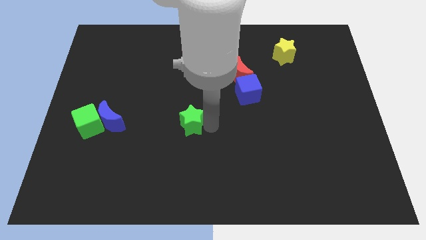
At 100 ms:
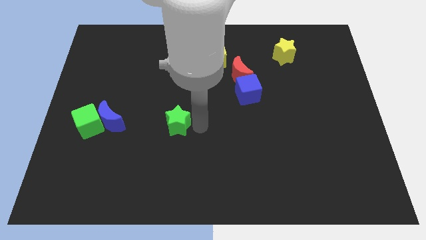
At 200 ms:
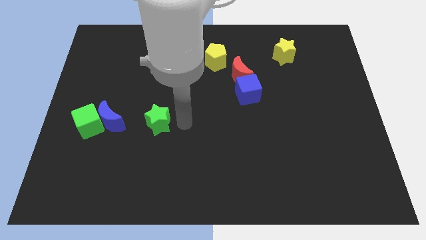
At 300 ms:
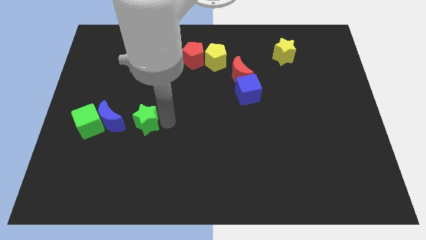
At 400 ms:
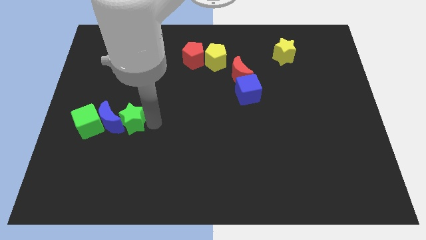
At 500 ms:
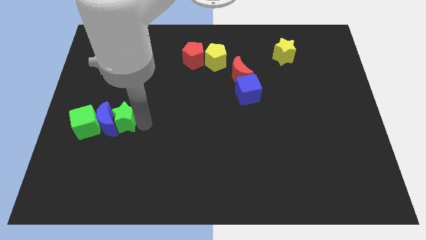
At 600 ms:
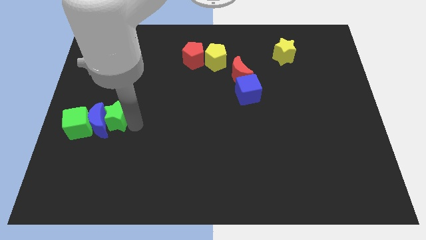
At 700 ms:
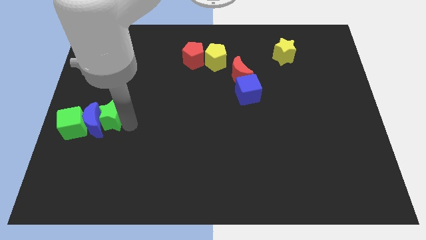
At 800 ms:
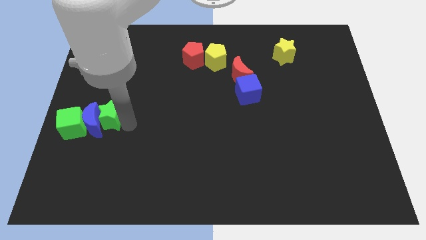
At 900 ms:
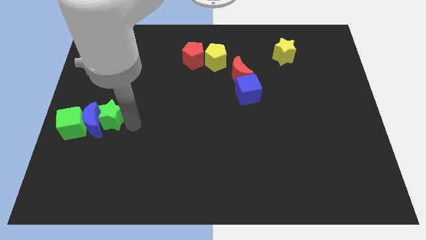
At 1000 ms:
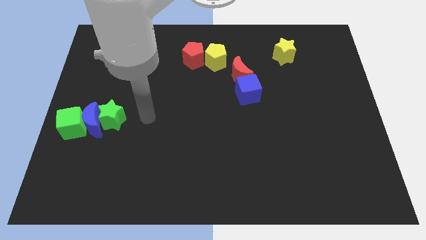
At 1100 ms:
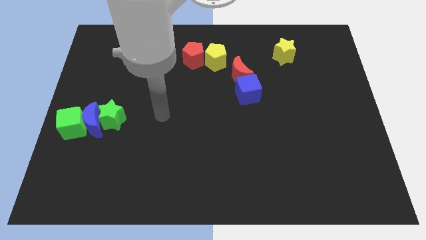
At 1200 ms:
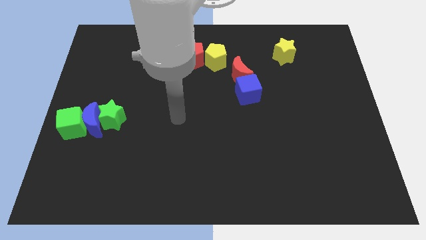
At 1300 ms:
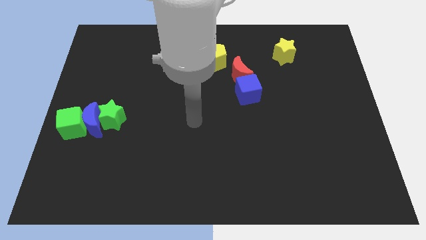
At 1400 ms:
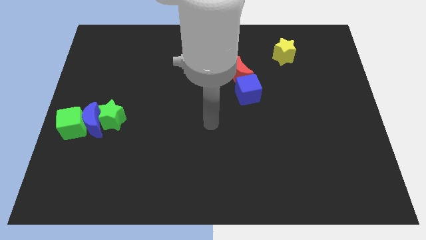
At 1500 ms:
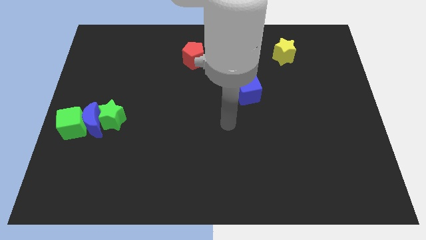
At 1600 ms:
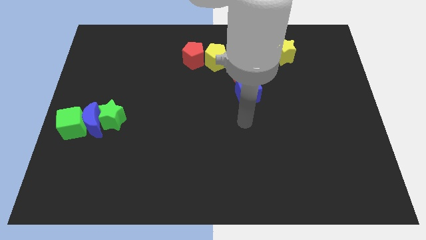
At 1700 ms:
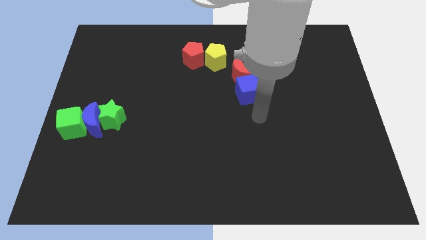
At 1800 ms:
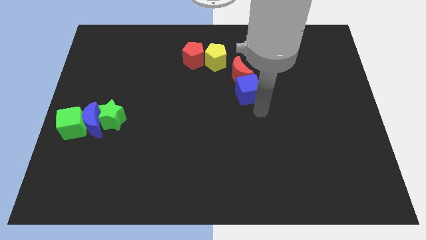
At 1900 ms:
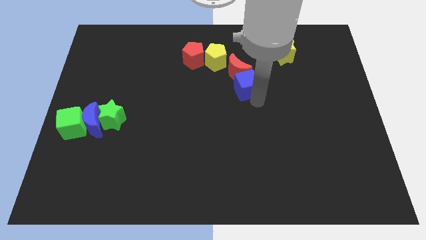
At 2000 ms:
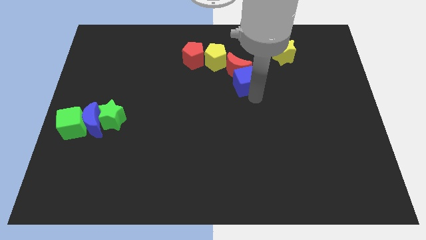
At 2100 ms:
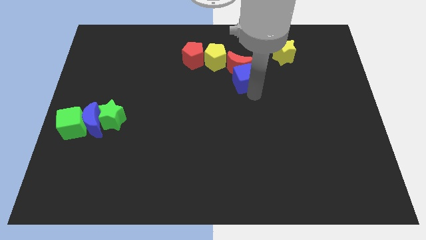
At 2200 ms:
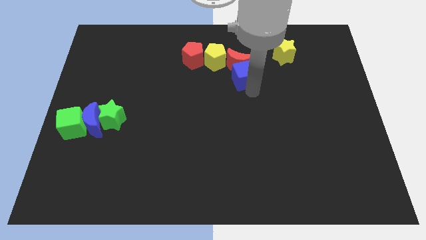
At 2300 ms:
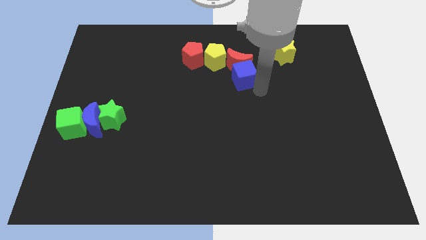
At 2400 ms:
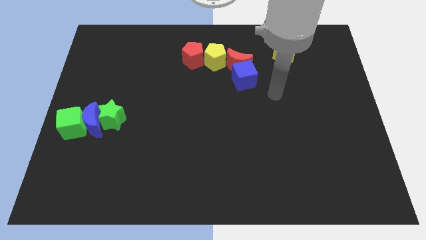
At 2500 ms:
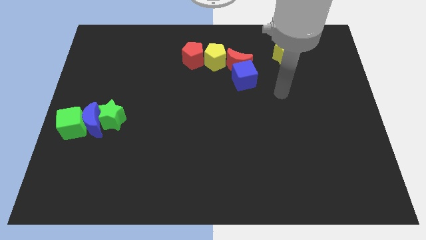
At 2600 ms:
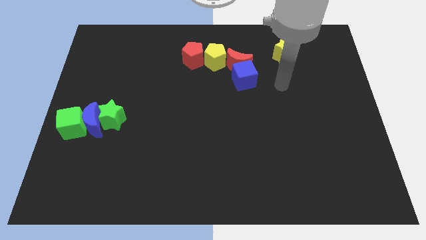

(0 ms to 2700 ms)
push the green star close to the blue moon

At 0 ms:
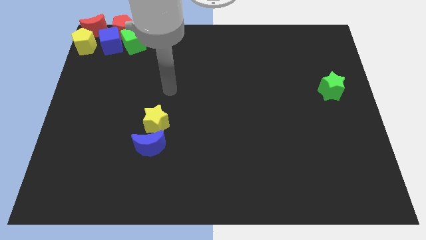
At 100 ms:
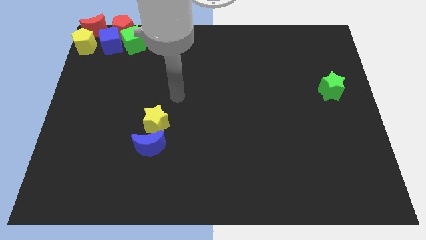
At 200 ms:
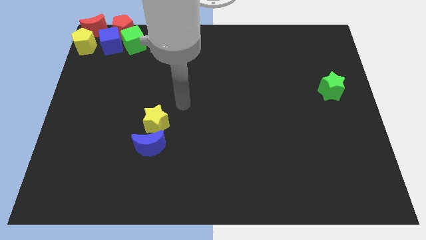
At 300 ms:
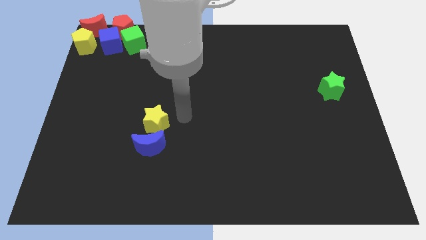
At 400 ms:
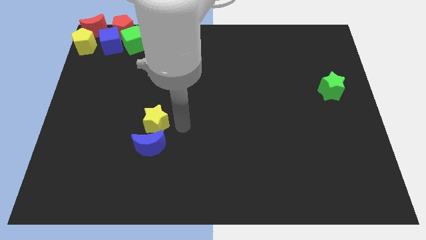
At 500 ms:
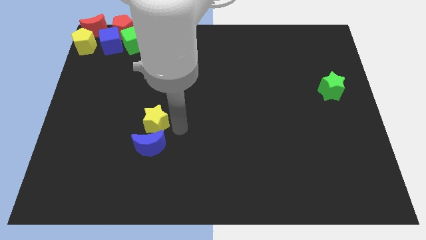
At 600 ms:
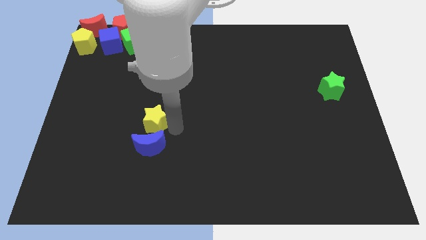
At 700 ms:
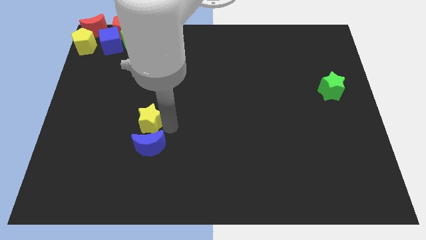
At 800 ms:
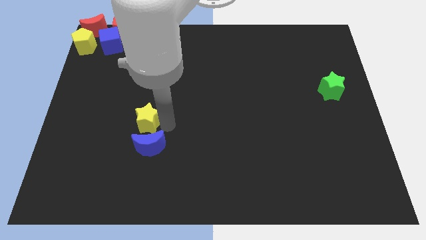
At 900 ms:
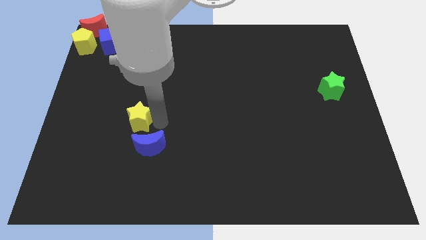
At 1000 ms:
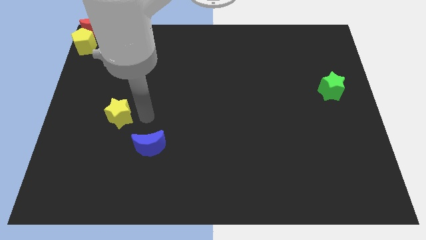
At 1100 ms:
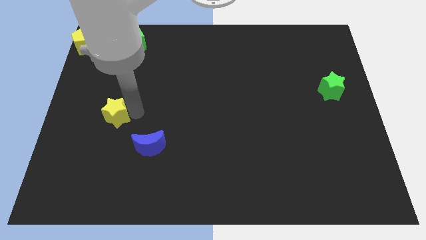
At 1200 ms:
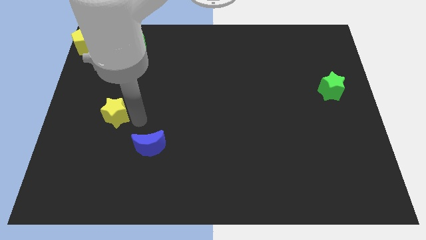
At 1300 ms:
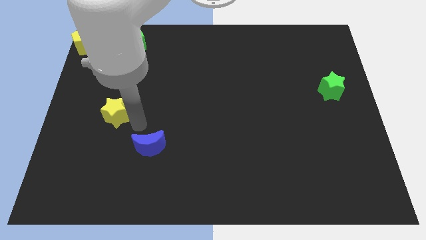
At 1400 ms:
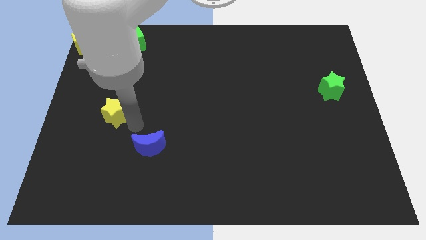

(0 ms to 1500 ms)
push the yellow star away from the blue crescent

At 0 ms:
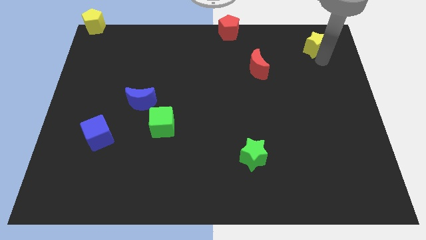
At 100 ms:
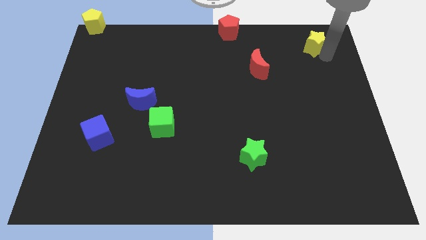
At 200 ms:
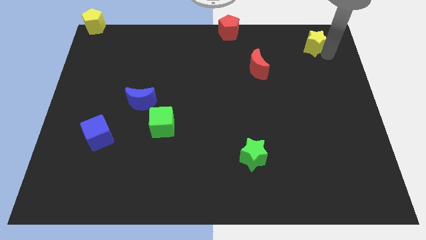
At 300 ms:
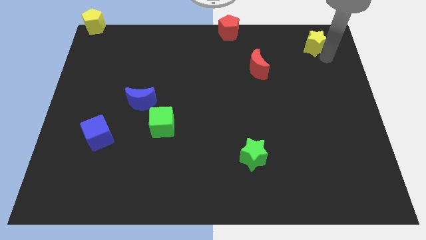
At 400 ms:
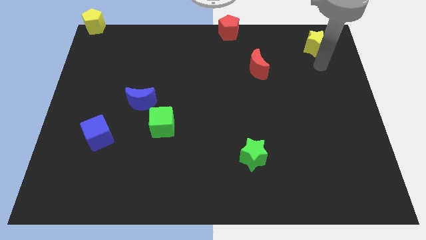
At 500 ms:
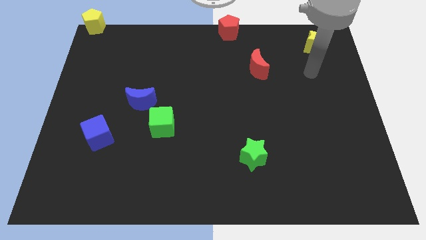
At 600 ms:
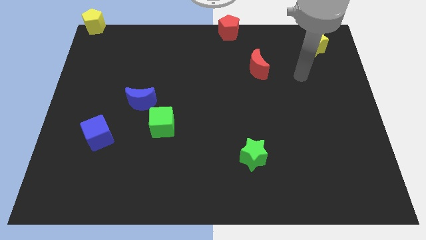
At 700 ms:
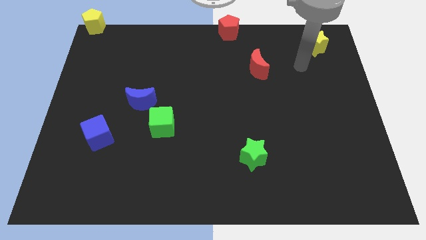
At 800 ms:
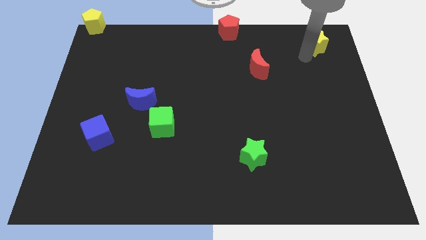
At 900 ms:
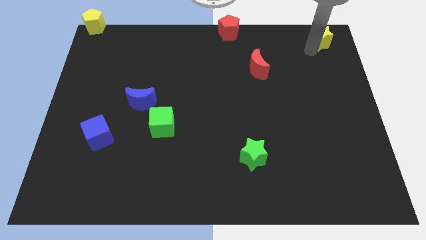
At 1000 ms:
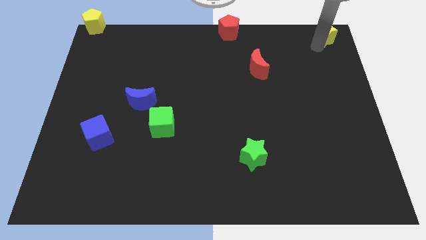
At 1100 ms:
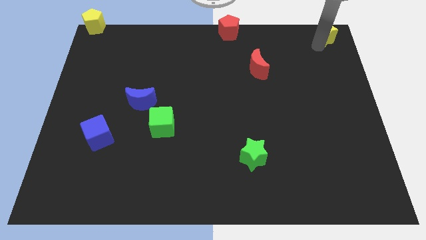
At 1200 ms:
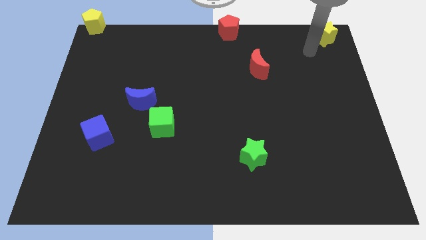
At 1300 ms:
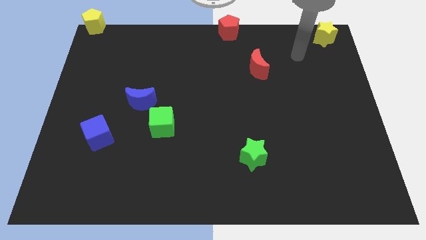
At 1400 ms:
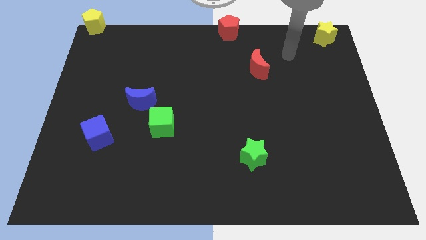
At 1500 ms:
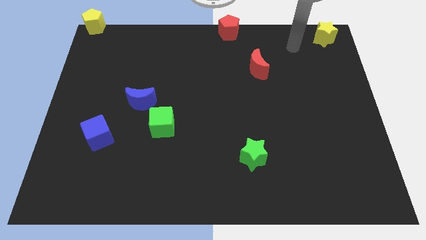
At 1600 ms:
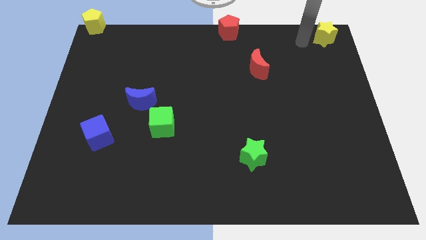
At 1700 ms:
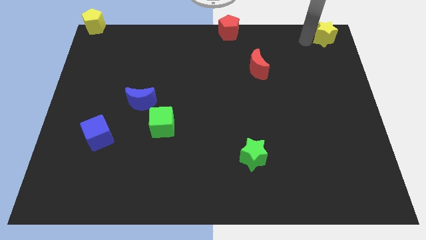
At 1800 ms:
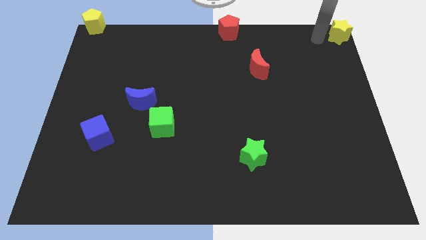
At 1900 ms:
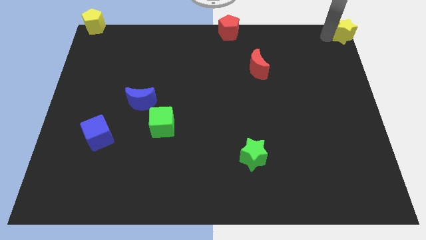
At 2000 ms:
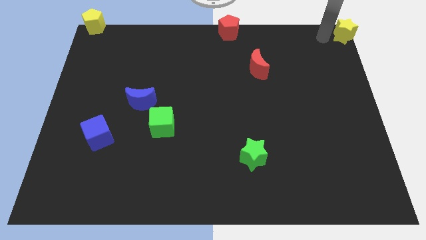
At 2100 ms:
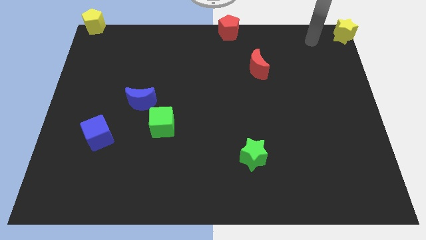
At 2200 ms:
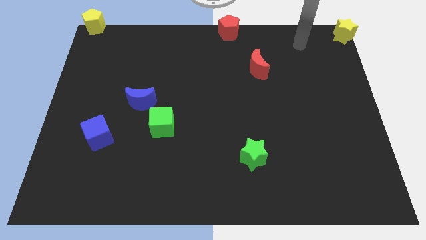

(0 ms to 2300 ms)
place yellow star towards top right corner

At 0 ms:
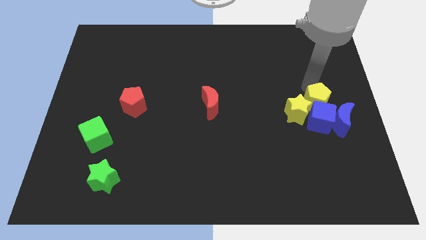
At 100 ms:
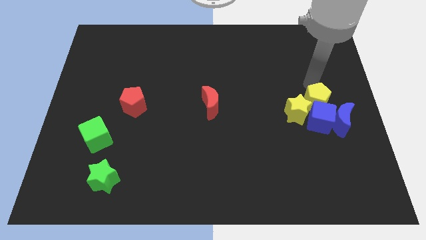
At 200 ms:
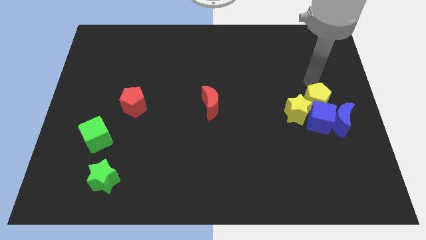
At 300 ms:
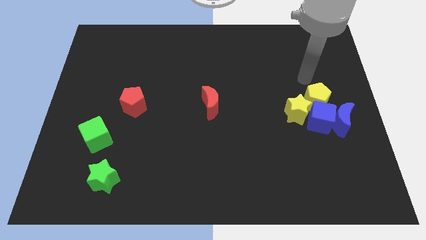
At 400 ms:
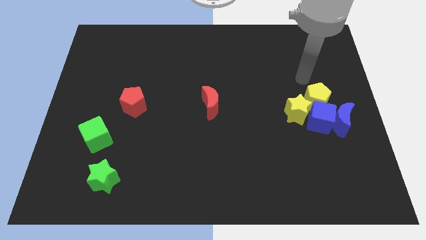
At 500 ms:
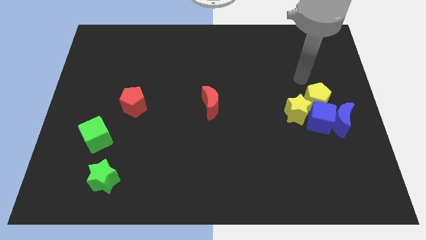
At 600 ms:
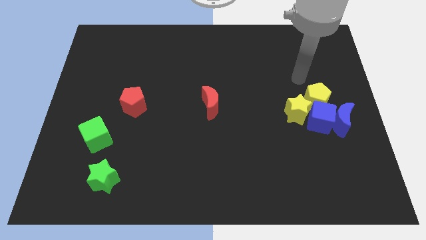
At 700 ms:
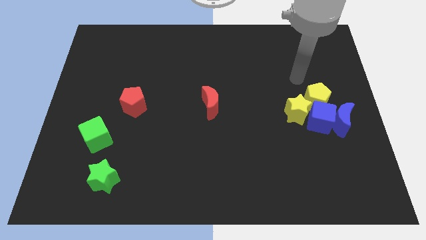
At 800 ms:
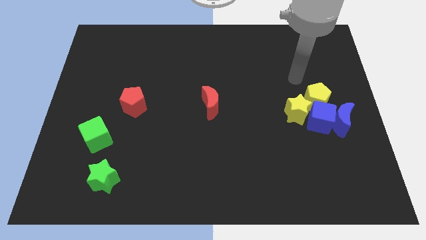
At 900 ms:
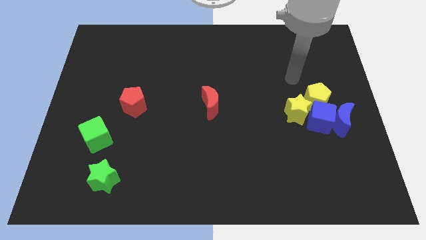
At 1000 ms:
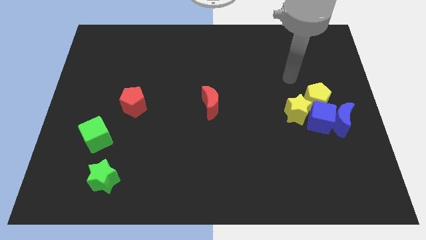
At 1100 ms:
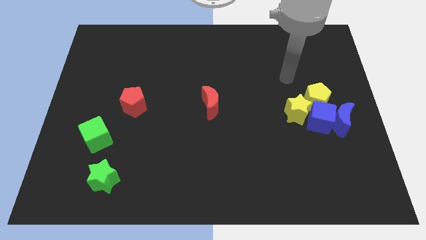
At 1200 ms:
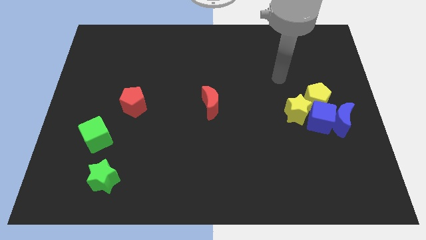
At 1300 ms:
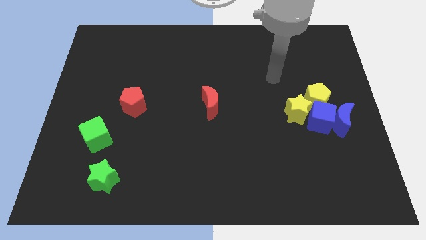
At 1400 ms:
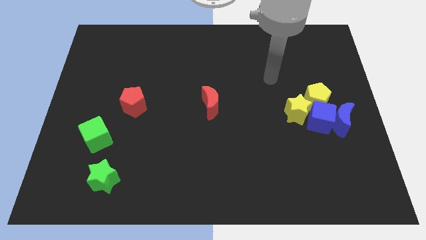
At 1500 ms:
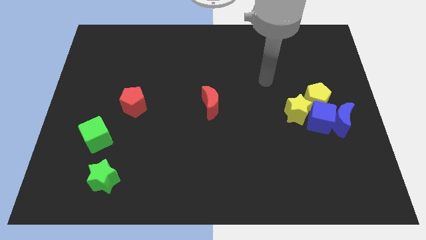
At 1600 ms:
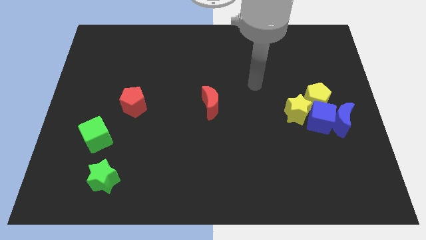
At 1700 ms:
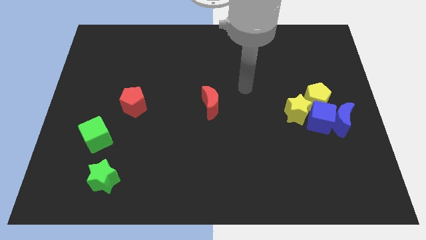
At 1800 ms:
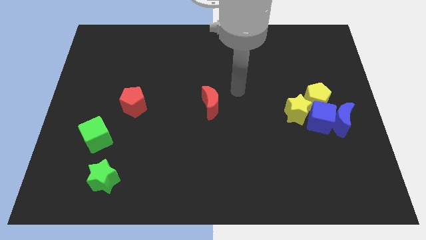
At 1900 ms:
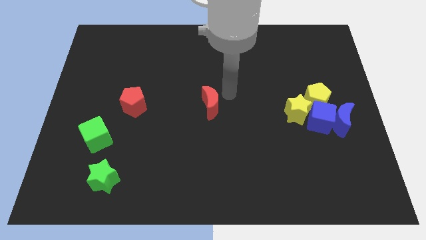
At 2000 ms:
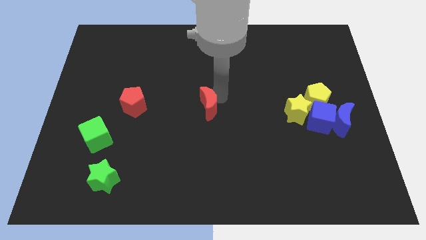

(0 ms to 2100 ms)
move your hand towards the right of the red crescent

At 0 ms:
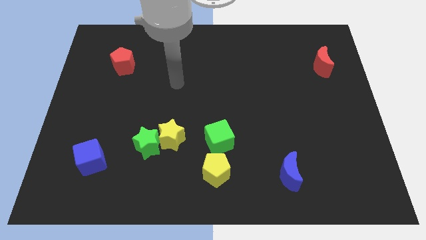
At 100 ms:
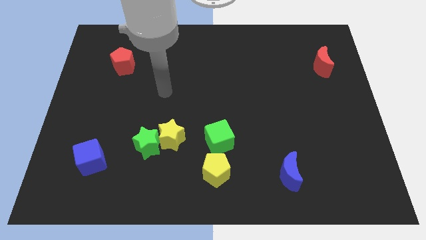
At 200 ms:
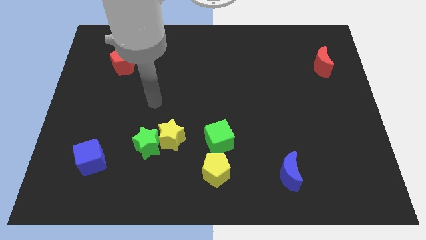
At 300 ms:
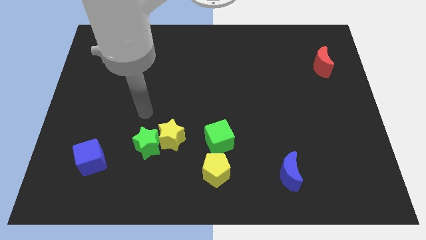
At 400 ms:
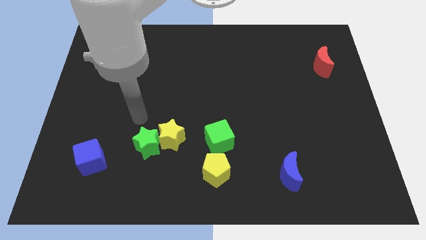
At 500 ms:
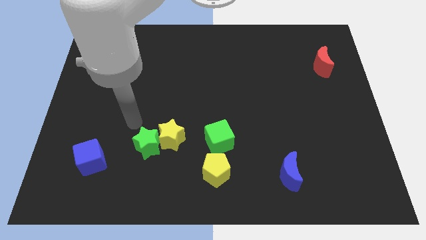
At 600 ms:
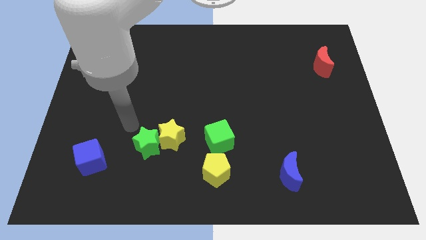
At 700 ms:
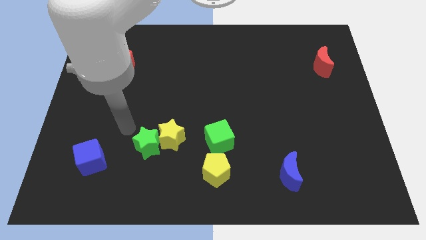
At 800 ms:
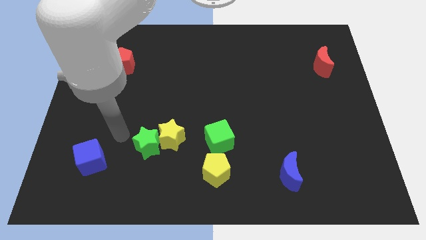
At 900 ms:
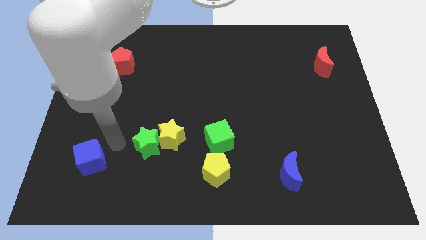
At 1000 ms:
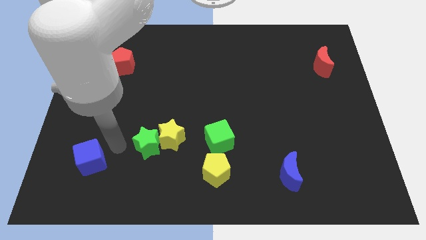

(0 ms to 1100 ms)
move arm in between blue cube and green star
